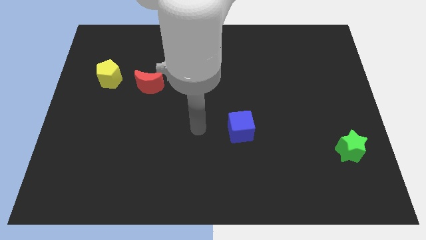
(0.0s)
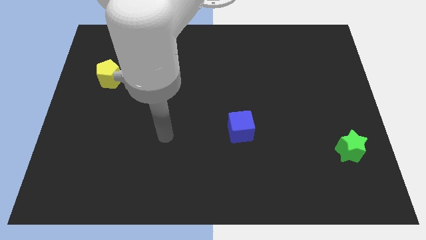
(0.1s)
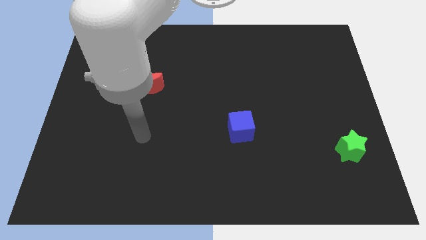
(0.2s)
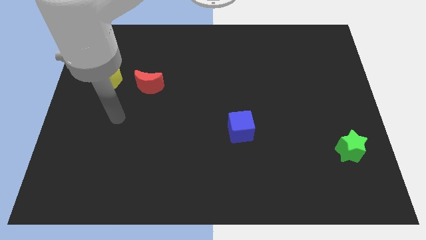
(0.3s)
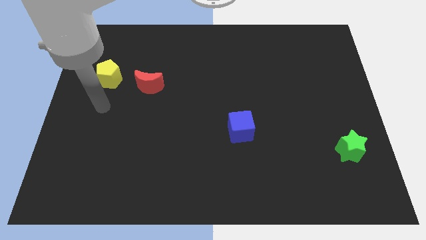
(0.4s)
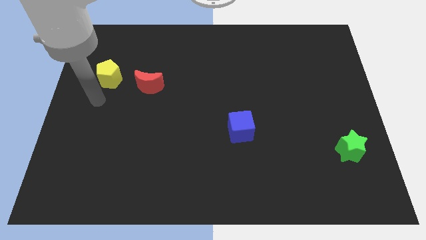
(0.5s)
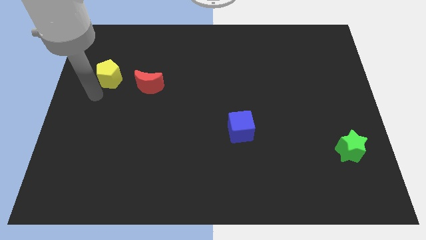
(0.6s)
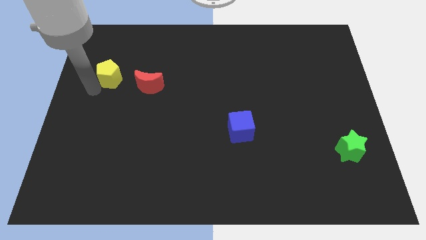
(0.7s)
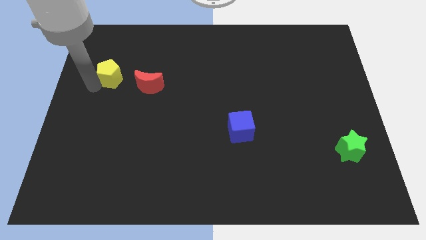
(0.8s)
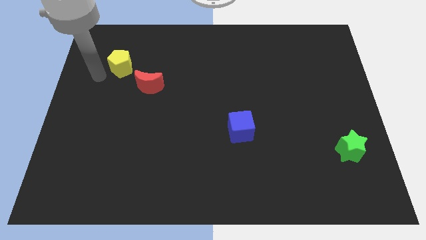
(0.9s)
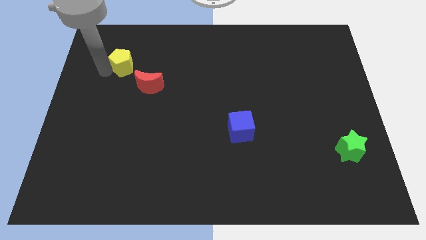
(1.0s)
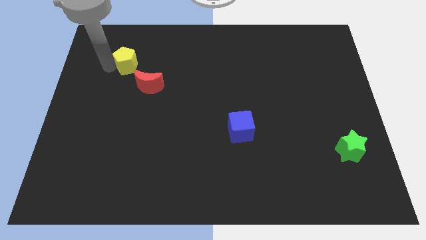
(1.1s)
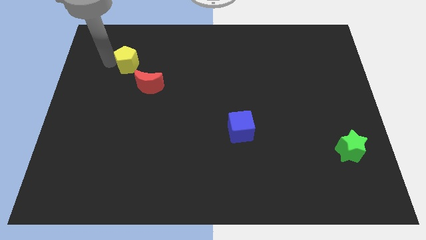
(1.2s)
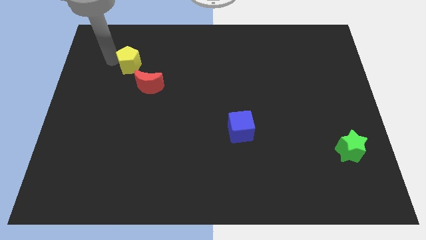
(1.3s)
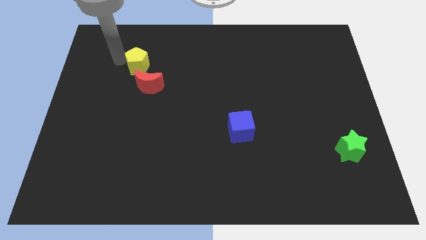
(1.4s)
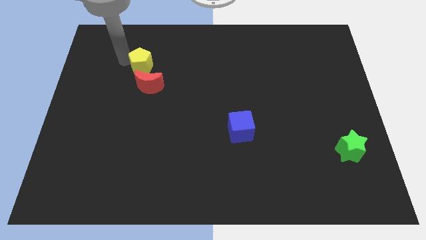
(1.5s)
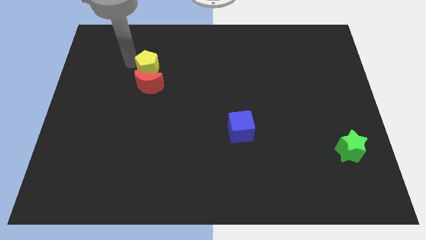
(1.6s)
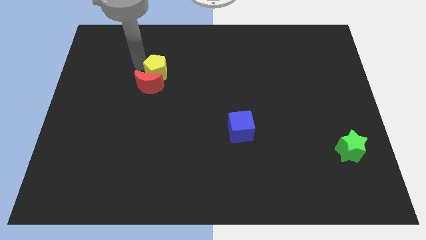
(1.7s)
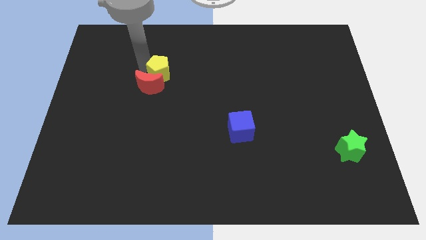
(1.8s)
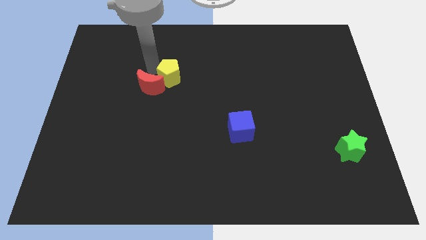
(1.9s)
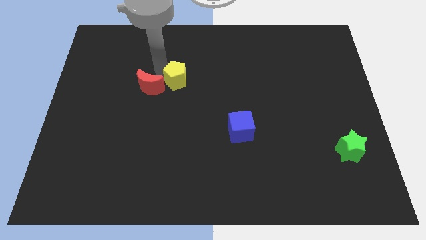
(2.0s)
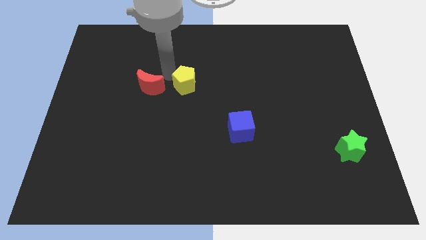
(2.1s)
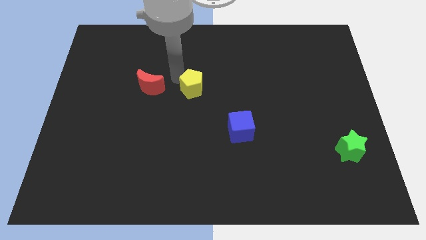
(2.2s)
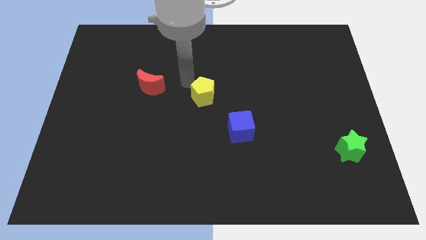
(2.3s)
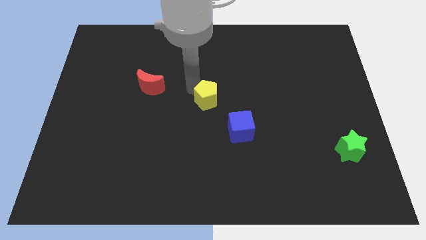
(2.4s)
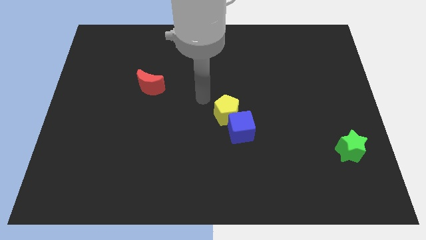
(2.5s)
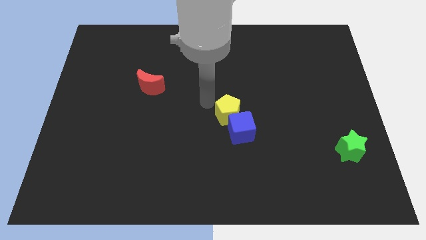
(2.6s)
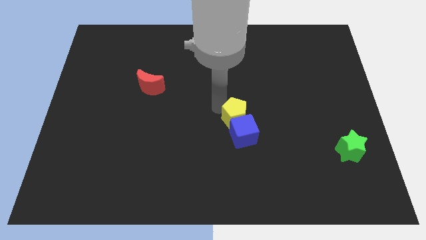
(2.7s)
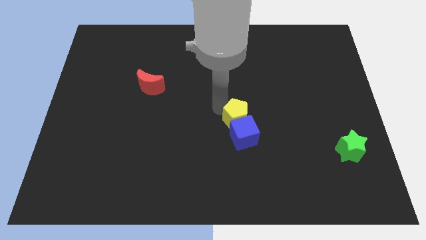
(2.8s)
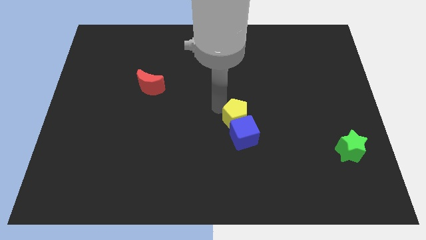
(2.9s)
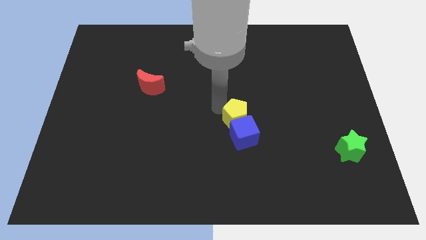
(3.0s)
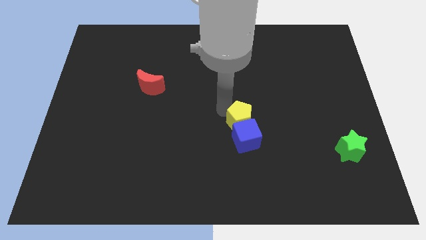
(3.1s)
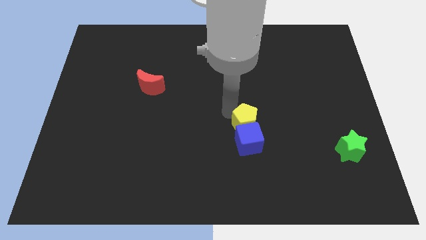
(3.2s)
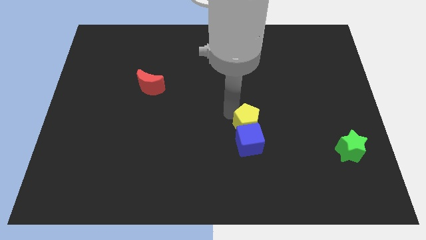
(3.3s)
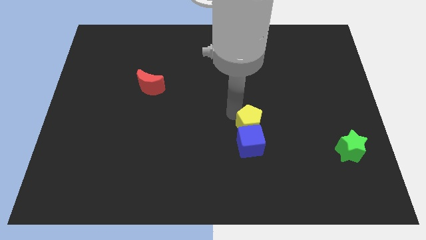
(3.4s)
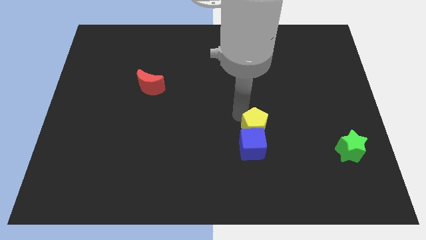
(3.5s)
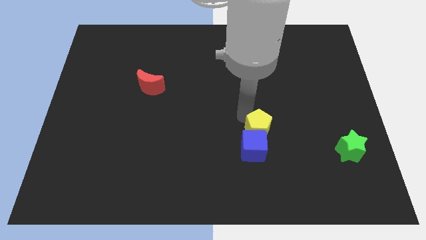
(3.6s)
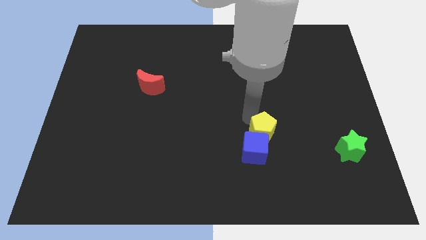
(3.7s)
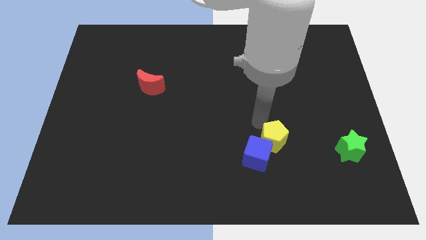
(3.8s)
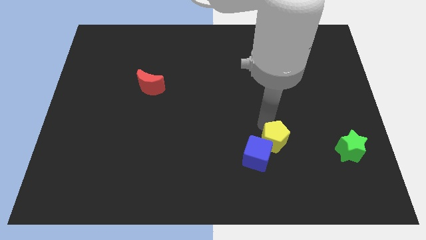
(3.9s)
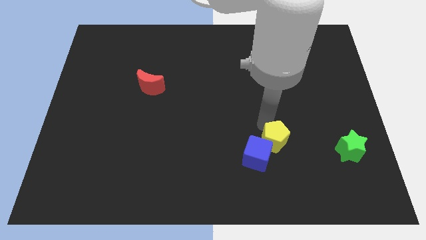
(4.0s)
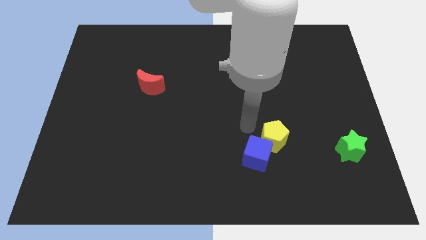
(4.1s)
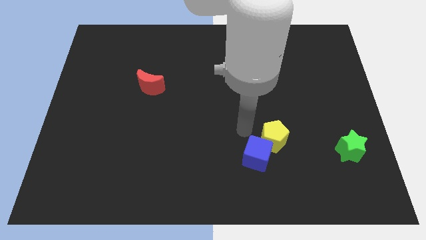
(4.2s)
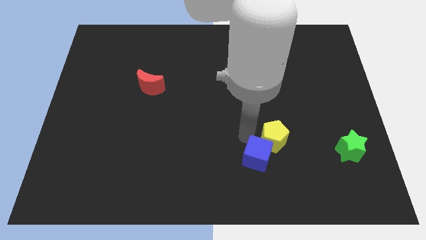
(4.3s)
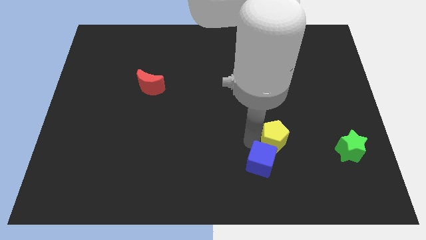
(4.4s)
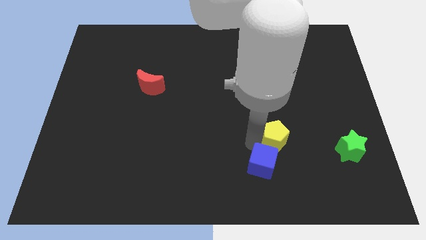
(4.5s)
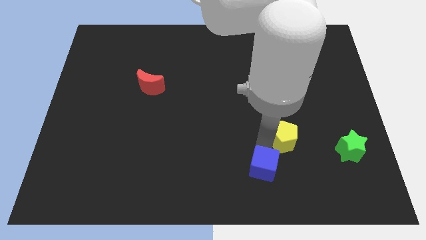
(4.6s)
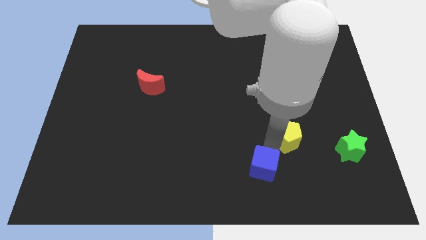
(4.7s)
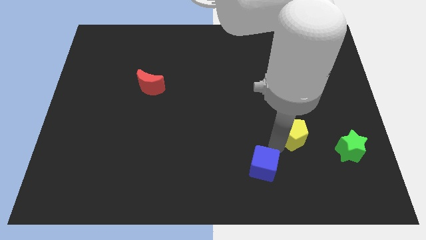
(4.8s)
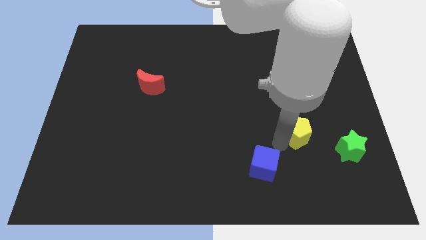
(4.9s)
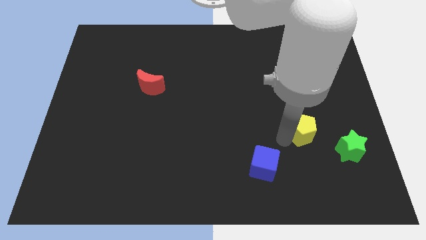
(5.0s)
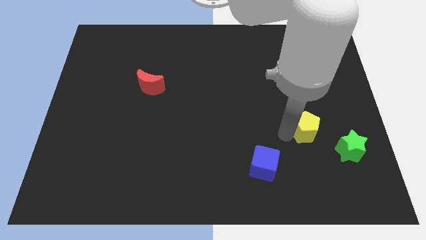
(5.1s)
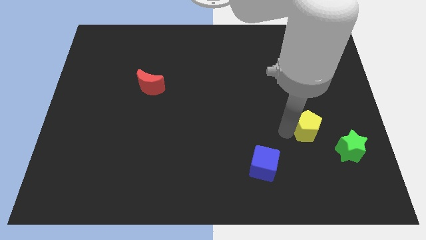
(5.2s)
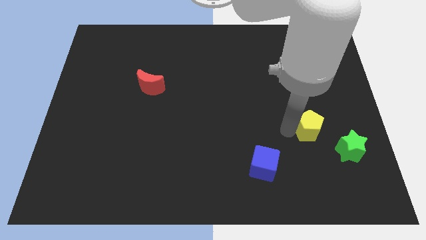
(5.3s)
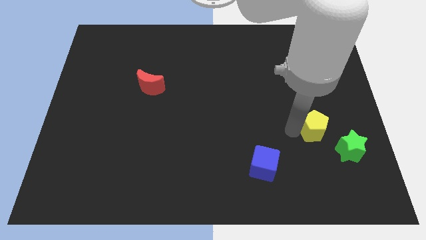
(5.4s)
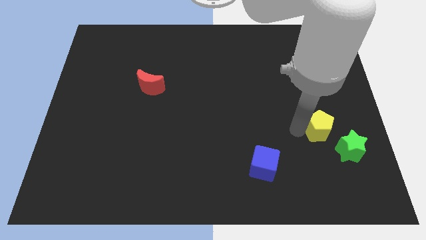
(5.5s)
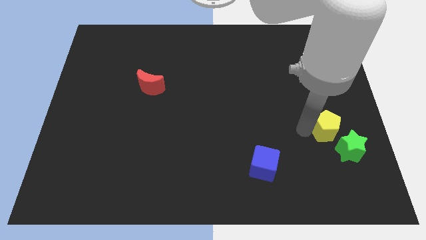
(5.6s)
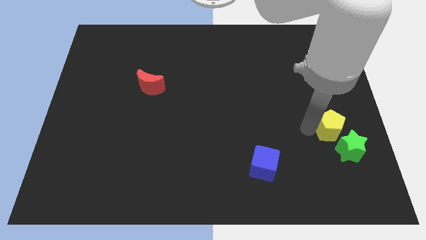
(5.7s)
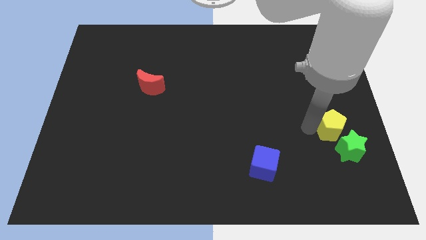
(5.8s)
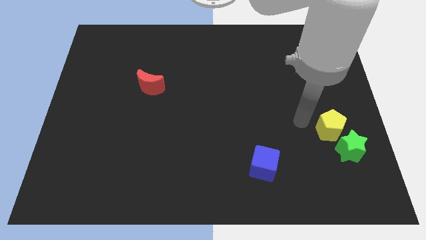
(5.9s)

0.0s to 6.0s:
push the pentagon to the star

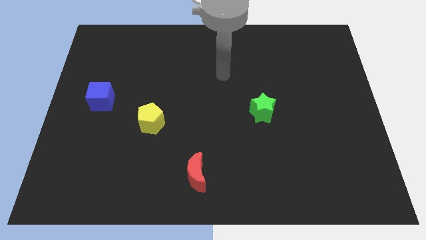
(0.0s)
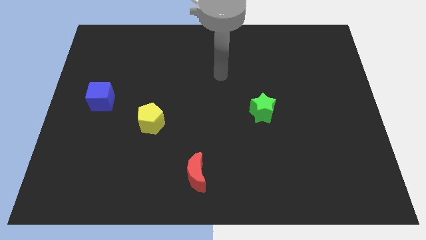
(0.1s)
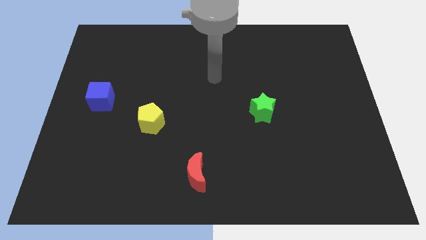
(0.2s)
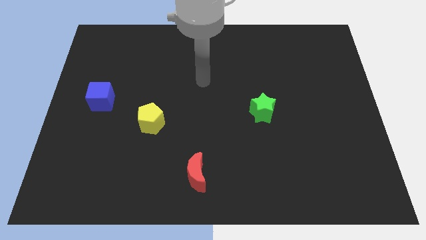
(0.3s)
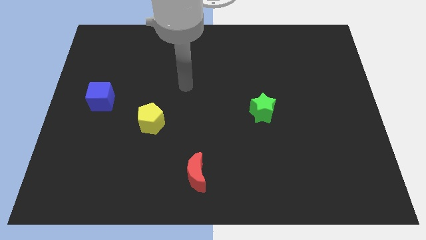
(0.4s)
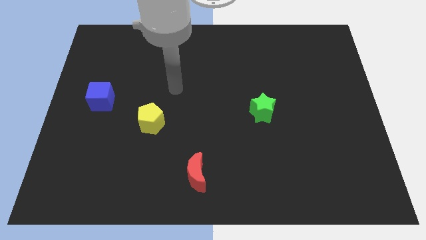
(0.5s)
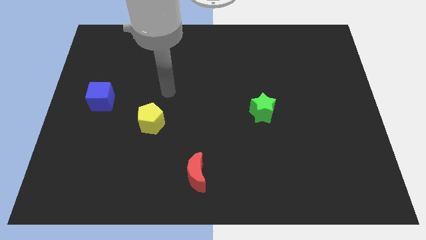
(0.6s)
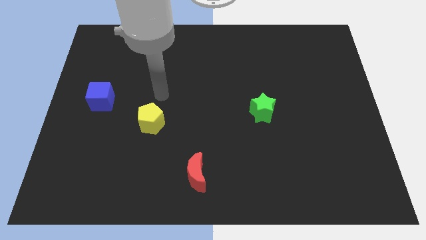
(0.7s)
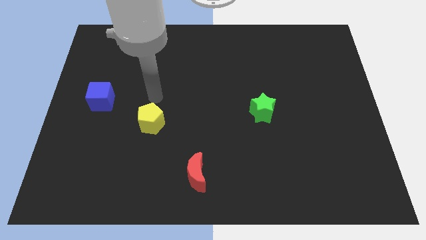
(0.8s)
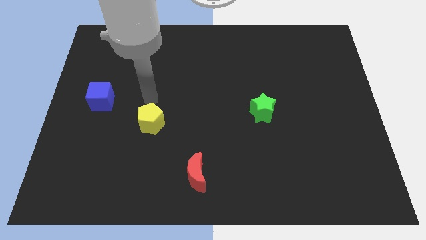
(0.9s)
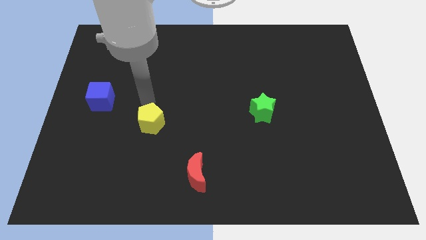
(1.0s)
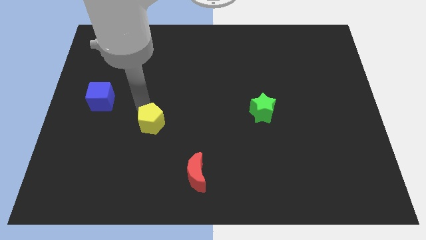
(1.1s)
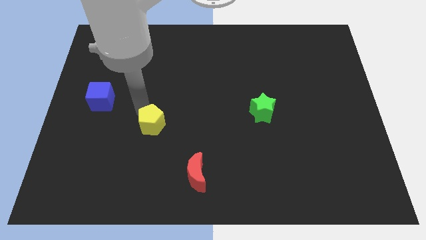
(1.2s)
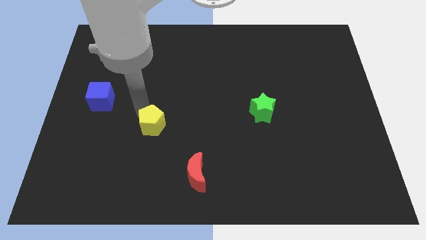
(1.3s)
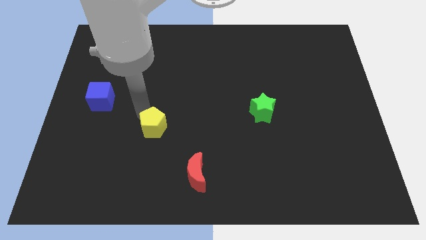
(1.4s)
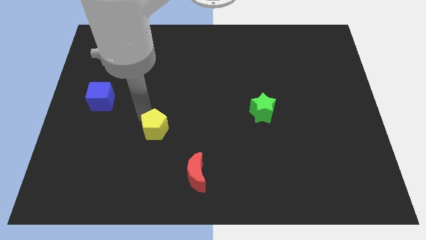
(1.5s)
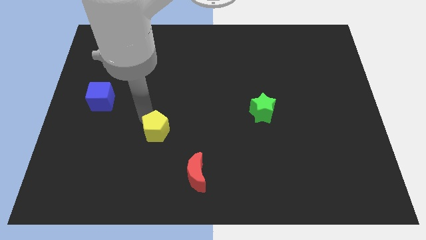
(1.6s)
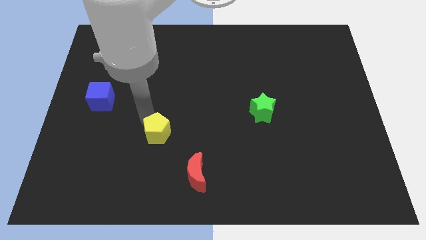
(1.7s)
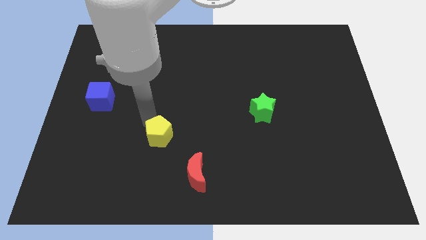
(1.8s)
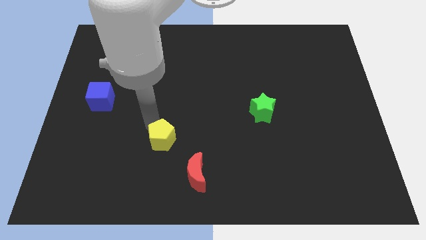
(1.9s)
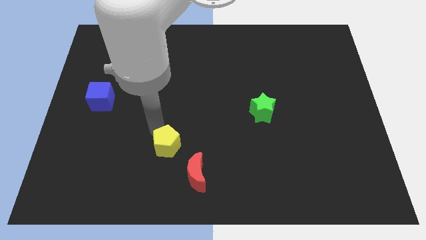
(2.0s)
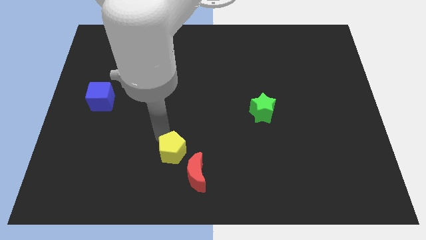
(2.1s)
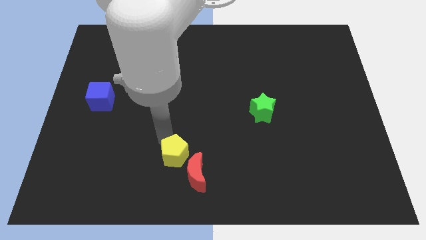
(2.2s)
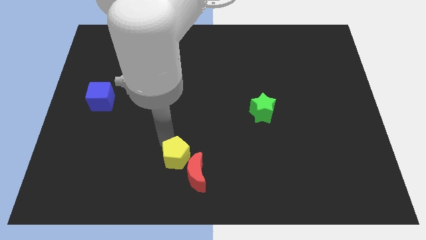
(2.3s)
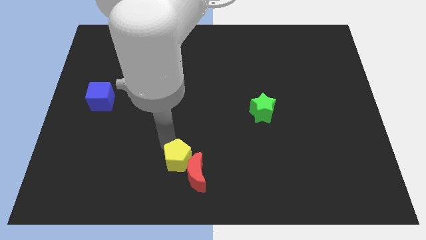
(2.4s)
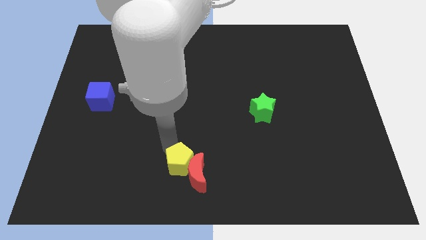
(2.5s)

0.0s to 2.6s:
move the yellow pentagon towards the red block

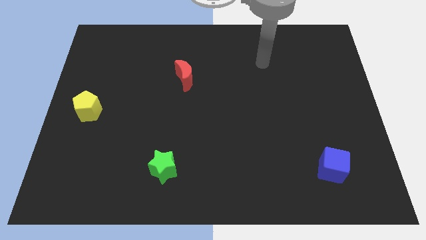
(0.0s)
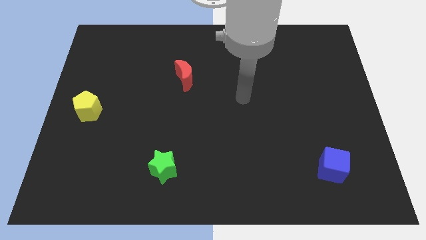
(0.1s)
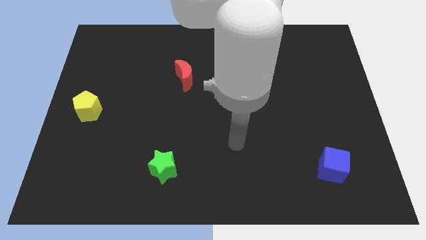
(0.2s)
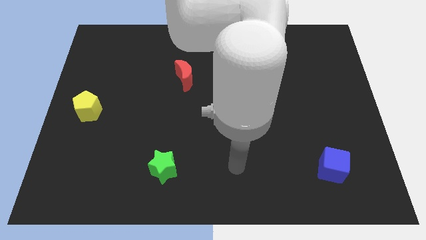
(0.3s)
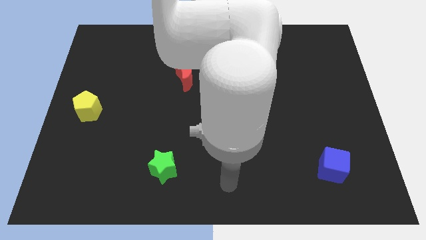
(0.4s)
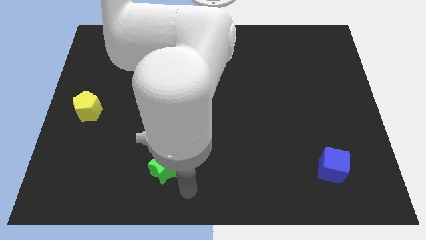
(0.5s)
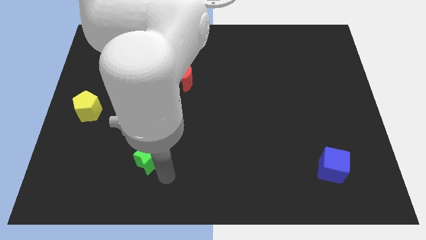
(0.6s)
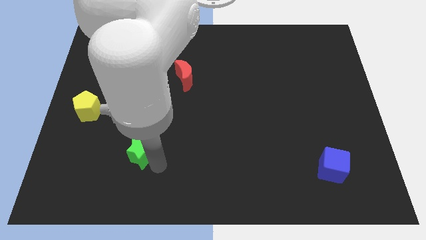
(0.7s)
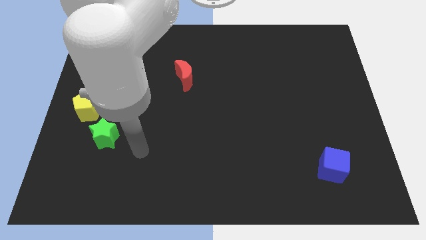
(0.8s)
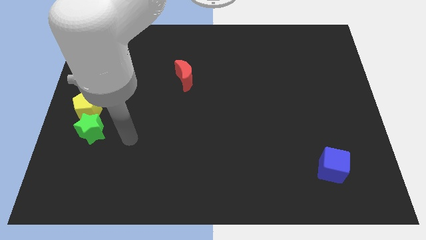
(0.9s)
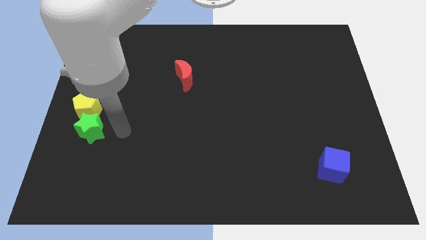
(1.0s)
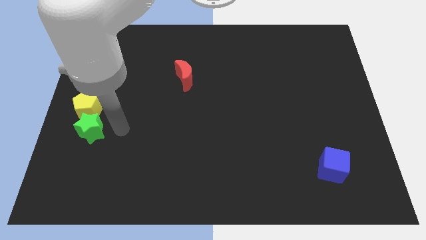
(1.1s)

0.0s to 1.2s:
push the green block close to the yellow pentagon
